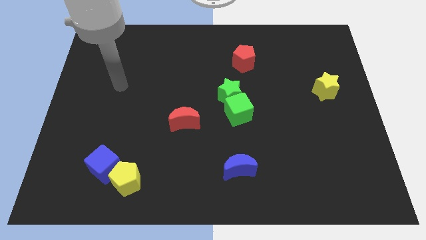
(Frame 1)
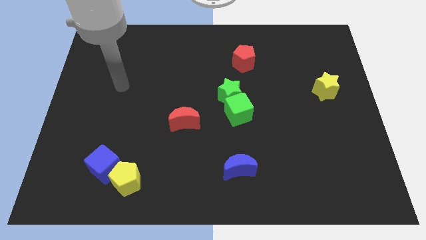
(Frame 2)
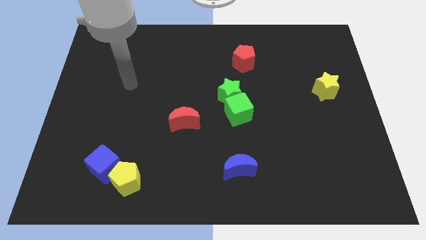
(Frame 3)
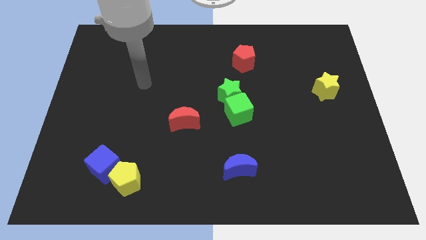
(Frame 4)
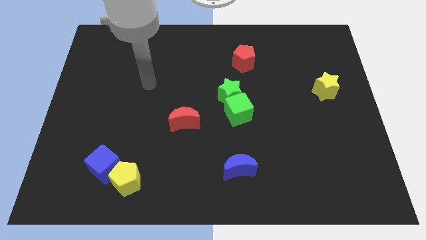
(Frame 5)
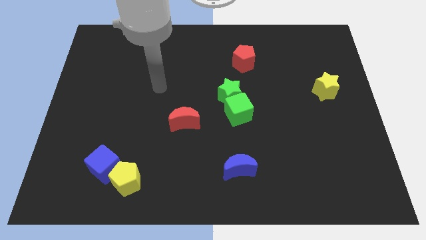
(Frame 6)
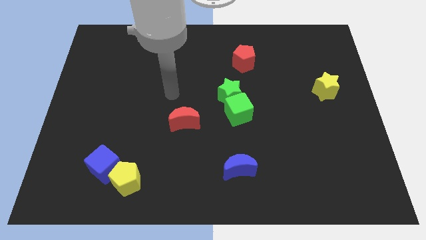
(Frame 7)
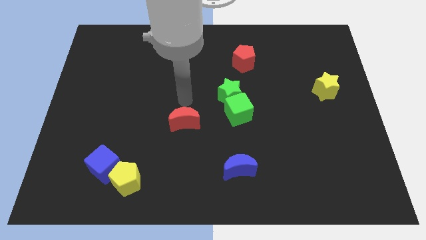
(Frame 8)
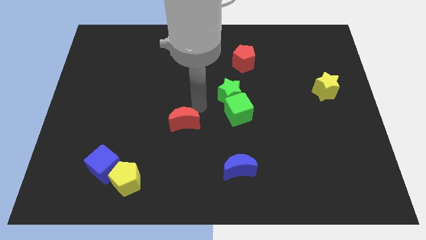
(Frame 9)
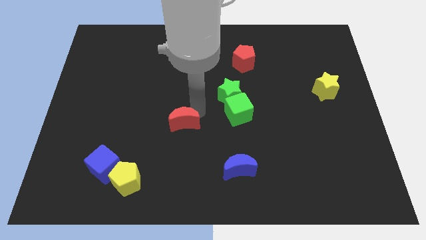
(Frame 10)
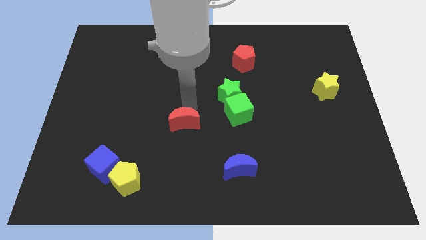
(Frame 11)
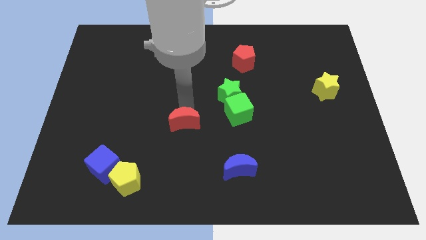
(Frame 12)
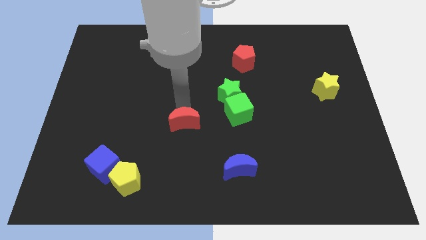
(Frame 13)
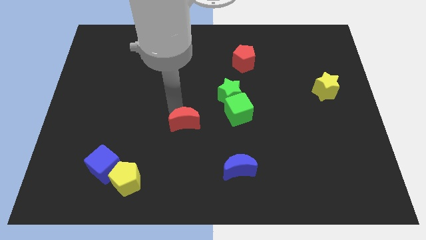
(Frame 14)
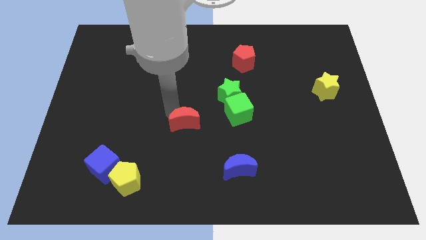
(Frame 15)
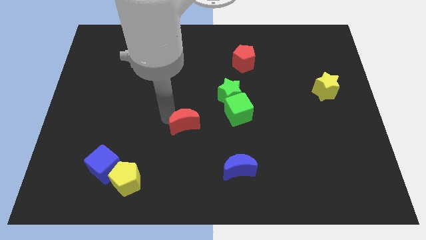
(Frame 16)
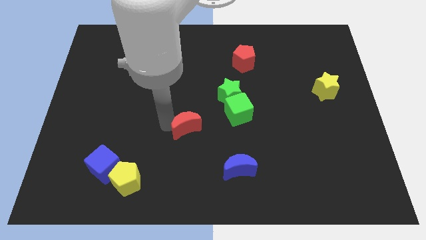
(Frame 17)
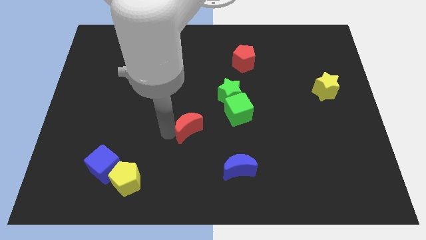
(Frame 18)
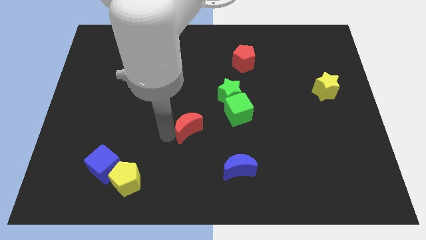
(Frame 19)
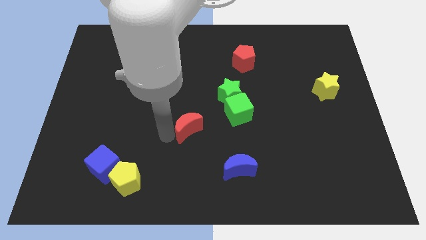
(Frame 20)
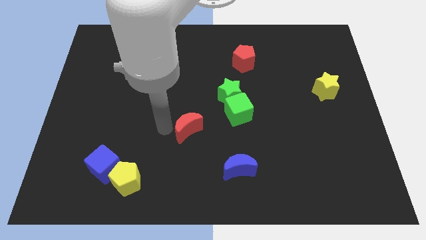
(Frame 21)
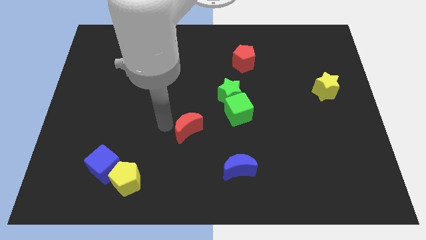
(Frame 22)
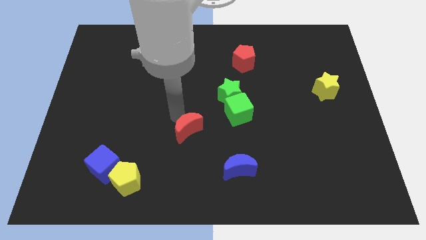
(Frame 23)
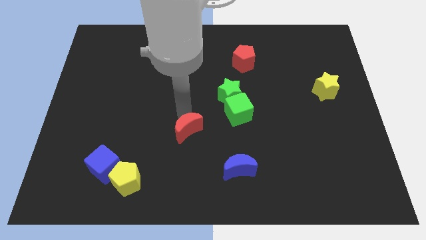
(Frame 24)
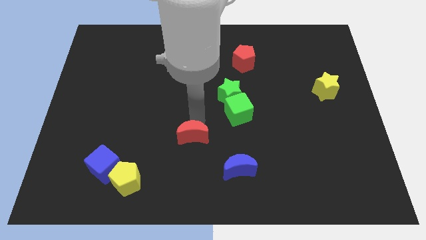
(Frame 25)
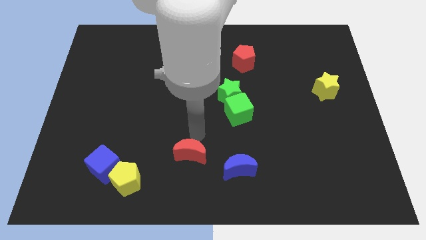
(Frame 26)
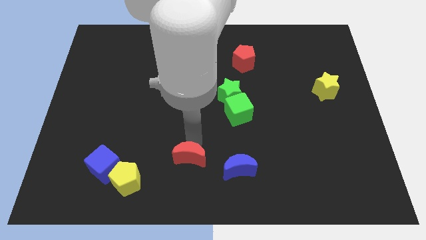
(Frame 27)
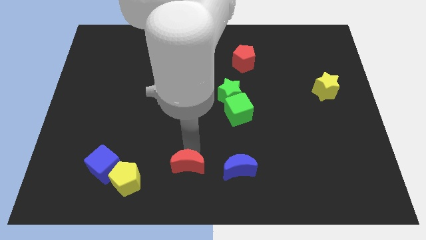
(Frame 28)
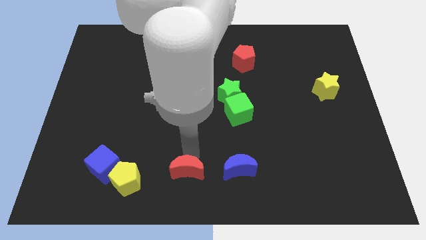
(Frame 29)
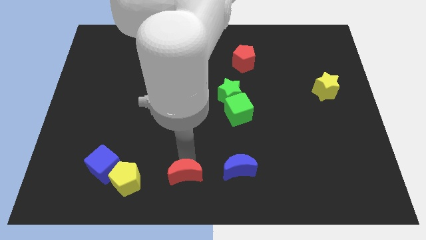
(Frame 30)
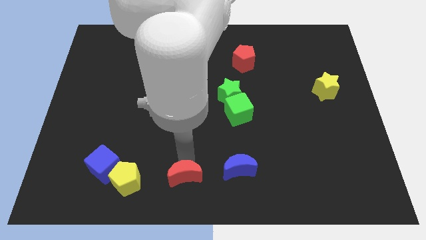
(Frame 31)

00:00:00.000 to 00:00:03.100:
place red moon in between blue moon and yellow pentagon

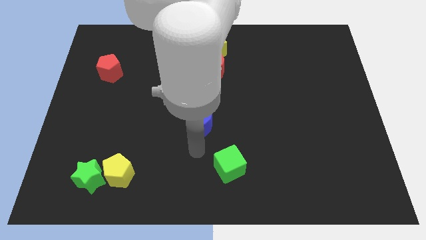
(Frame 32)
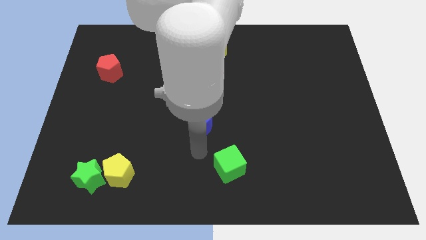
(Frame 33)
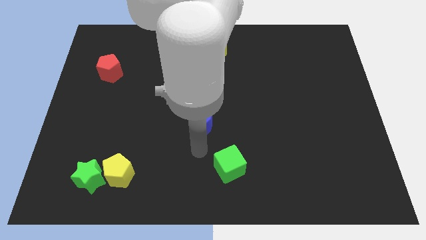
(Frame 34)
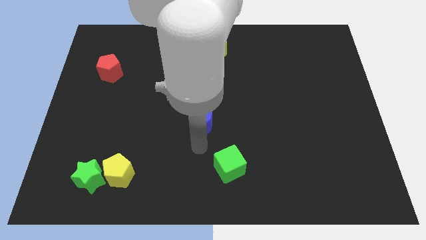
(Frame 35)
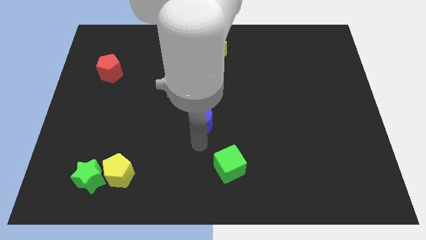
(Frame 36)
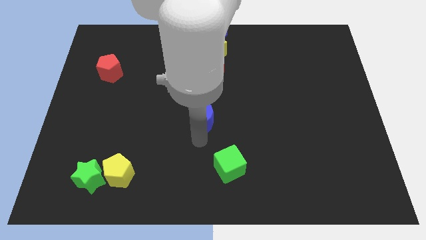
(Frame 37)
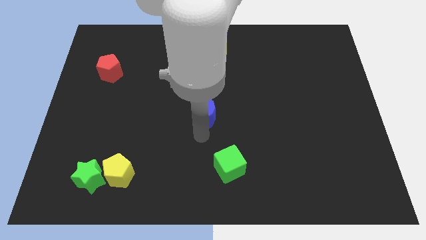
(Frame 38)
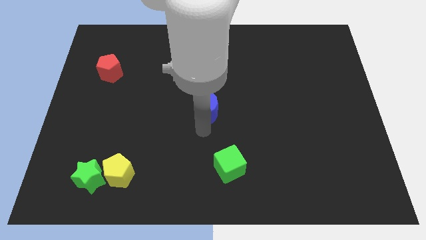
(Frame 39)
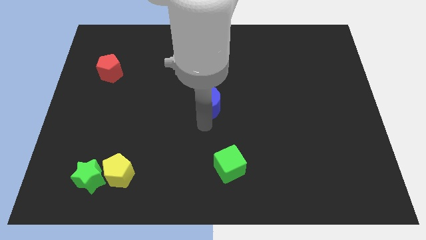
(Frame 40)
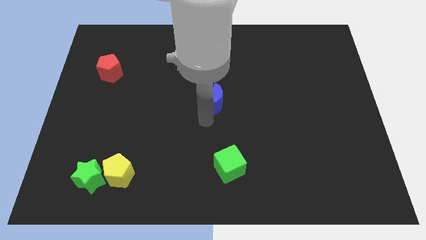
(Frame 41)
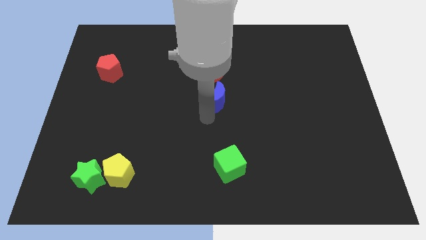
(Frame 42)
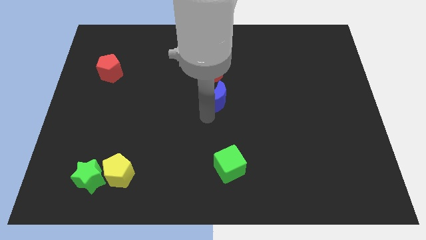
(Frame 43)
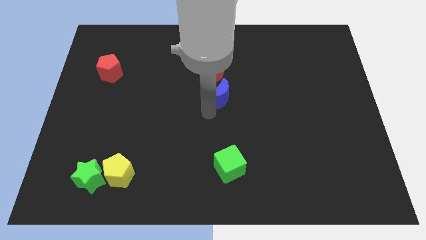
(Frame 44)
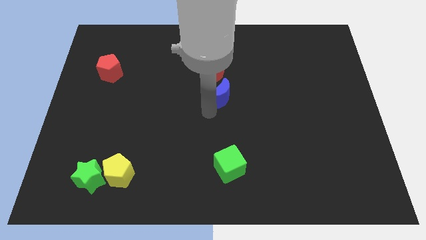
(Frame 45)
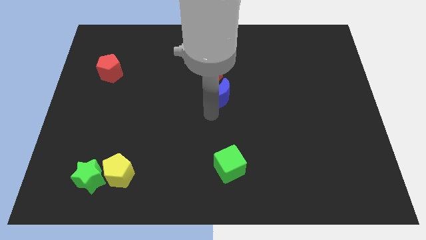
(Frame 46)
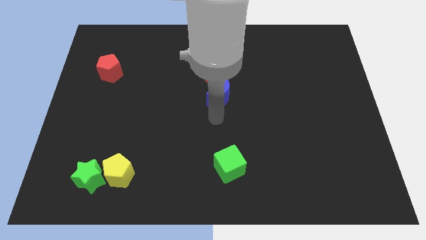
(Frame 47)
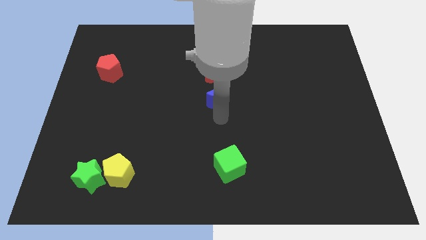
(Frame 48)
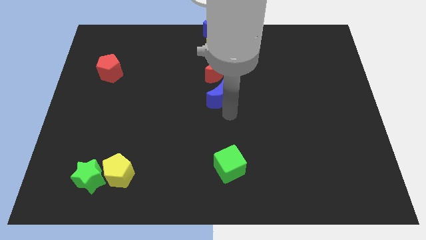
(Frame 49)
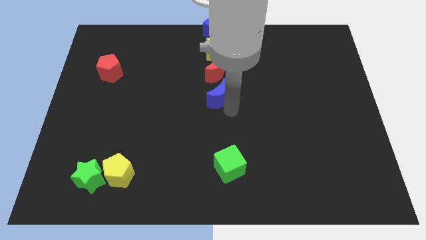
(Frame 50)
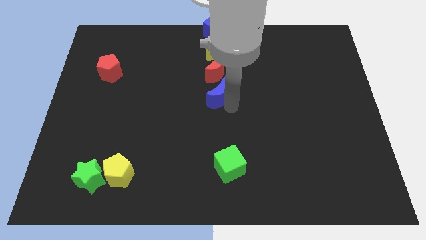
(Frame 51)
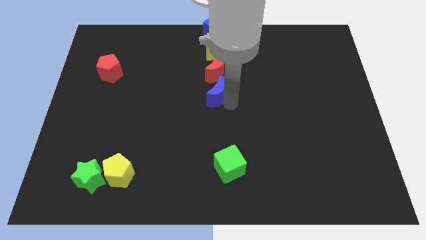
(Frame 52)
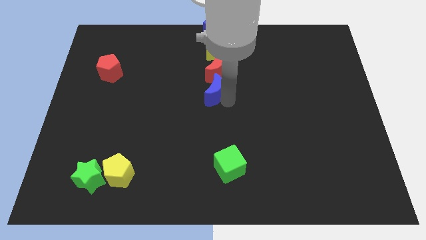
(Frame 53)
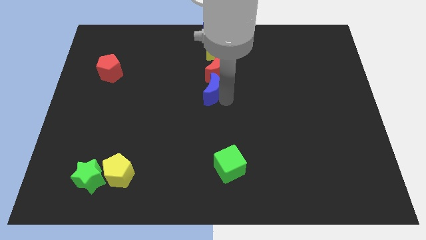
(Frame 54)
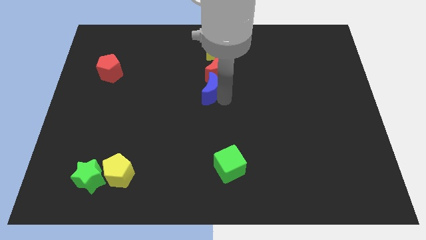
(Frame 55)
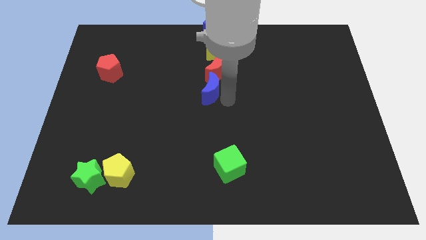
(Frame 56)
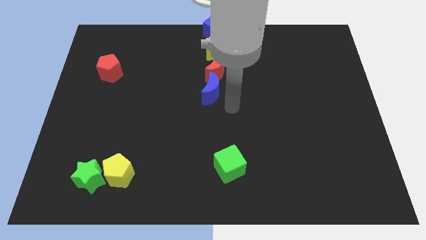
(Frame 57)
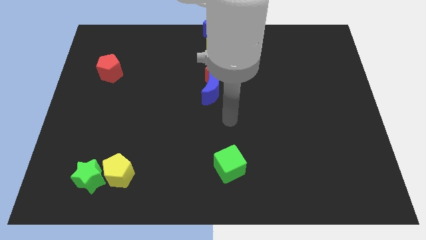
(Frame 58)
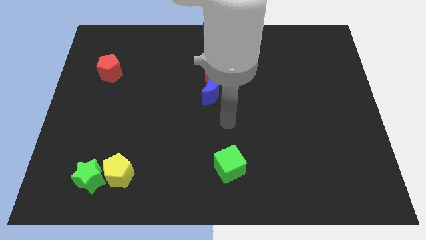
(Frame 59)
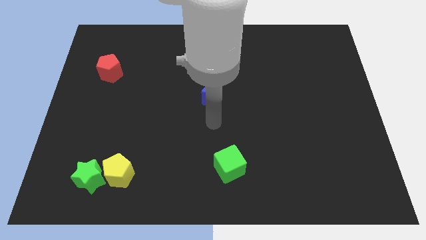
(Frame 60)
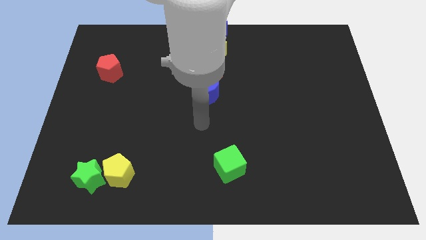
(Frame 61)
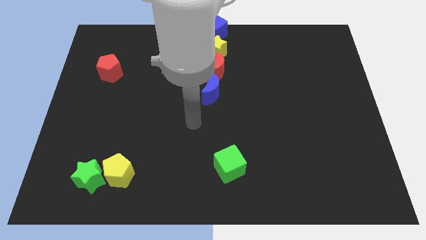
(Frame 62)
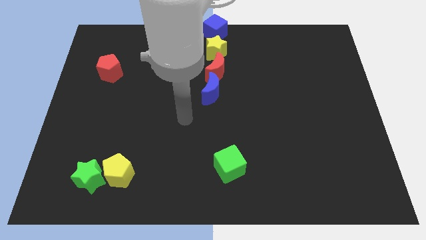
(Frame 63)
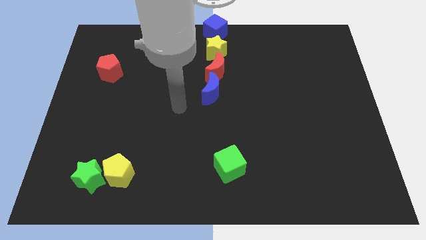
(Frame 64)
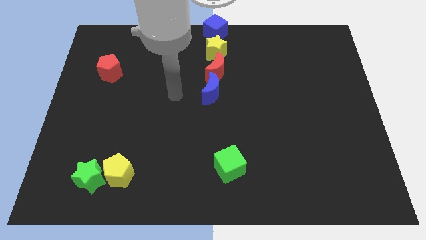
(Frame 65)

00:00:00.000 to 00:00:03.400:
move the blue crescent to the bottom of the red crescent

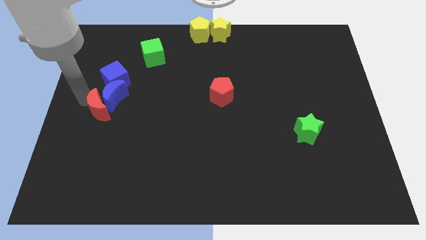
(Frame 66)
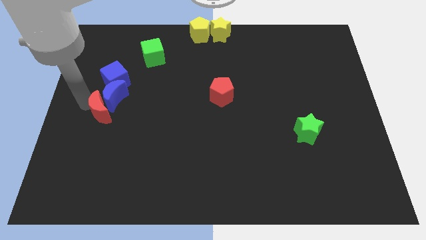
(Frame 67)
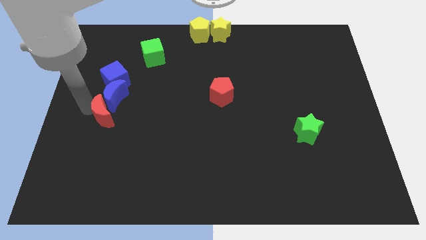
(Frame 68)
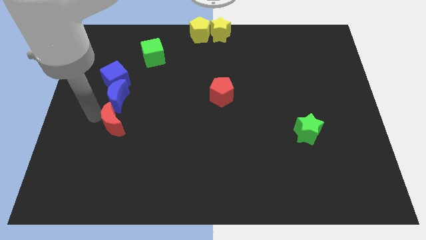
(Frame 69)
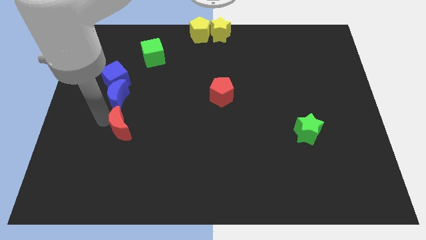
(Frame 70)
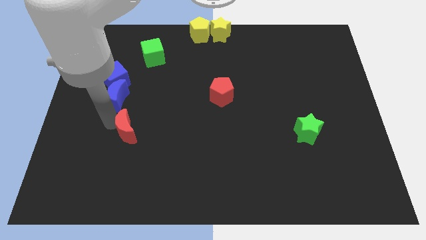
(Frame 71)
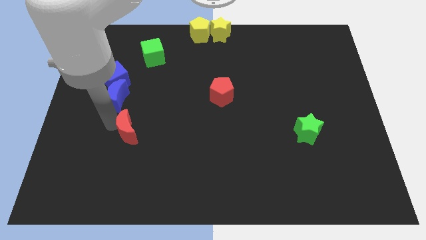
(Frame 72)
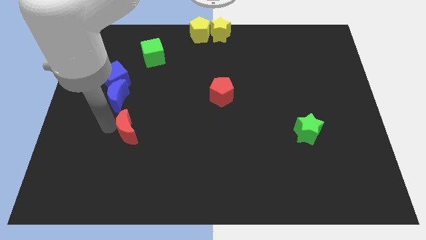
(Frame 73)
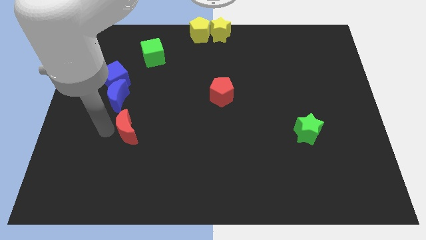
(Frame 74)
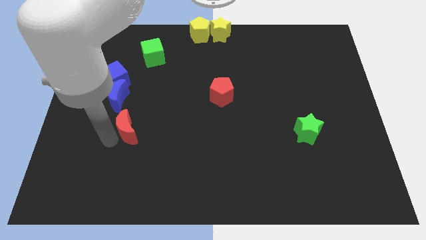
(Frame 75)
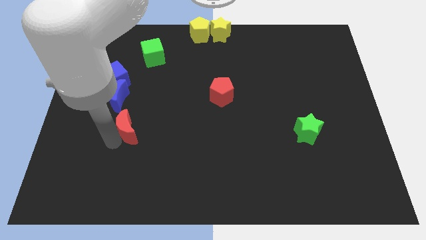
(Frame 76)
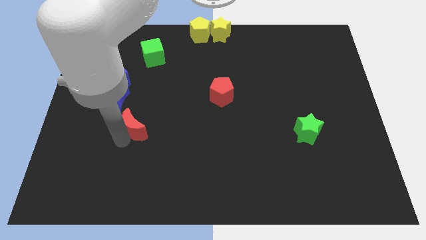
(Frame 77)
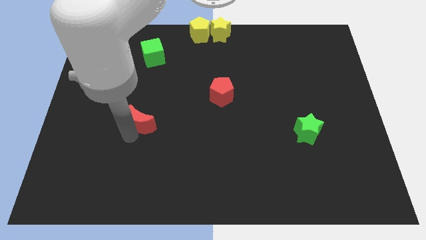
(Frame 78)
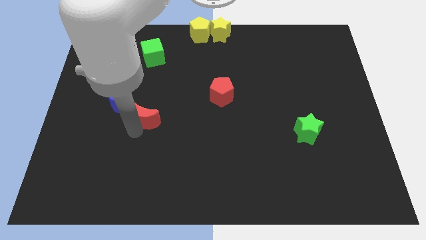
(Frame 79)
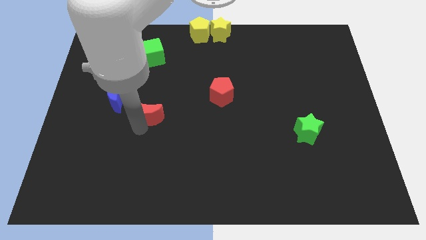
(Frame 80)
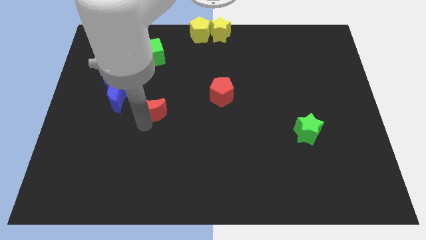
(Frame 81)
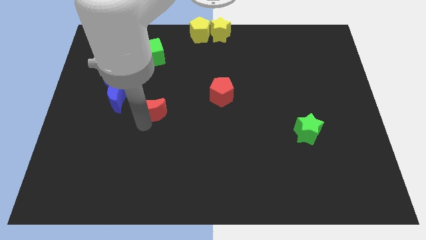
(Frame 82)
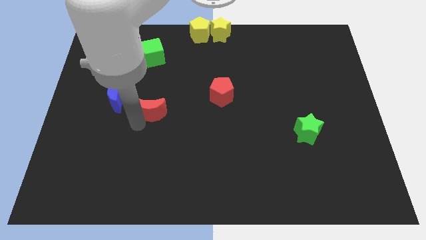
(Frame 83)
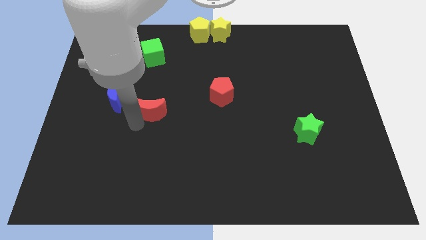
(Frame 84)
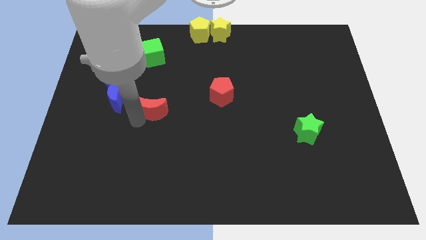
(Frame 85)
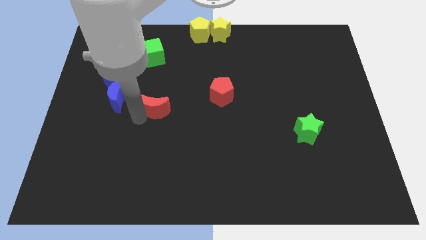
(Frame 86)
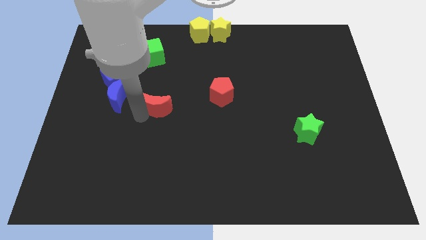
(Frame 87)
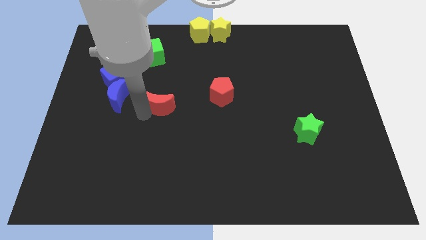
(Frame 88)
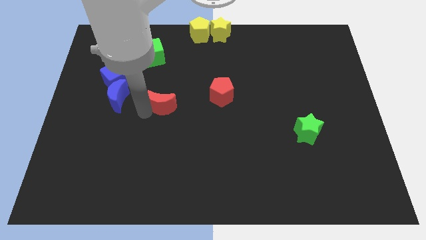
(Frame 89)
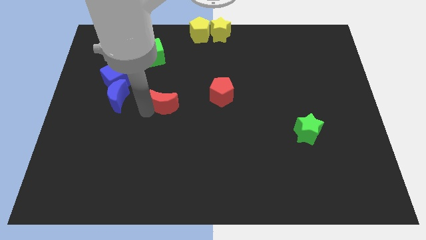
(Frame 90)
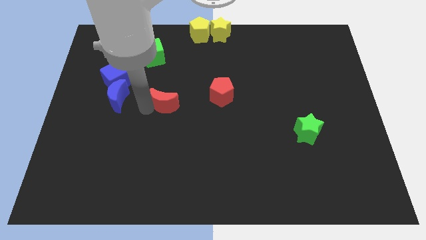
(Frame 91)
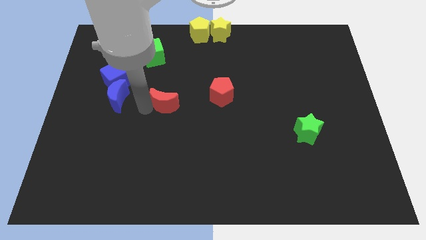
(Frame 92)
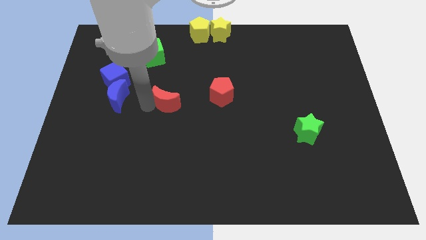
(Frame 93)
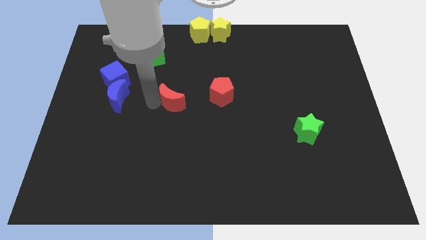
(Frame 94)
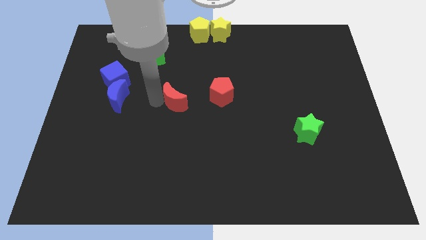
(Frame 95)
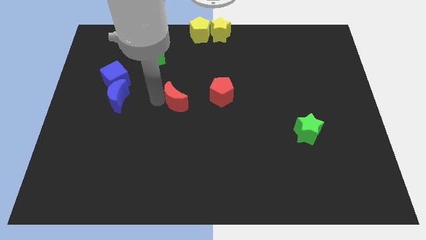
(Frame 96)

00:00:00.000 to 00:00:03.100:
place red moon to the right of blue moon
